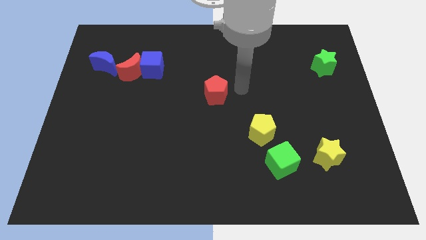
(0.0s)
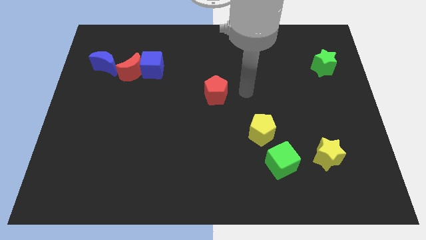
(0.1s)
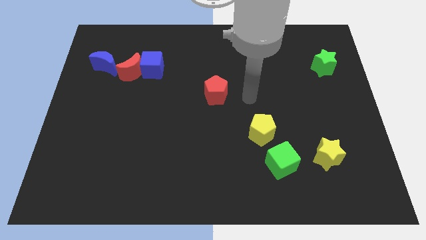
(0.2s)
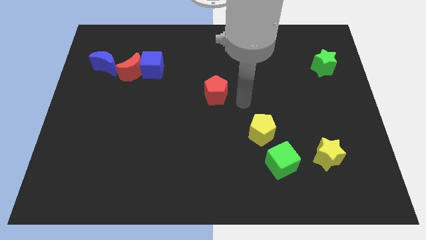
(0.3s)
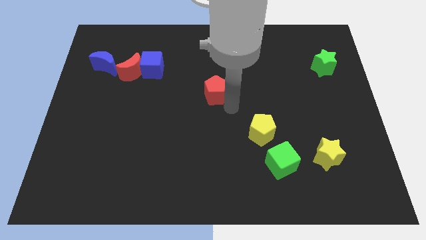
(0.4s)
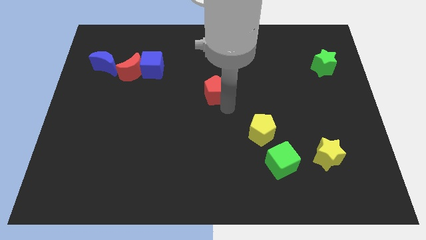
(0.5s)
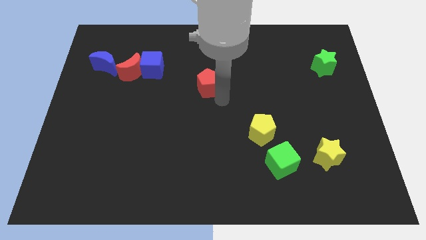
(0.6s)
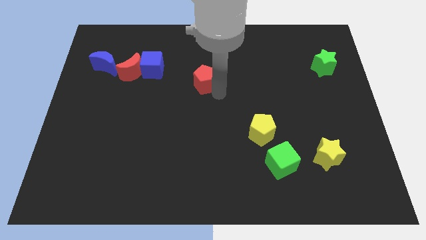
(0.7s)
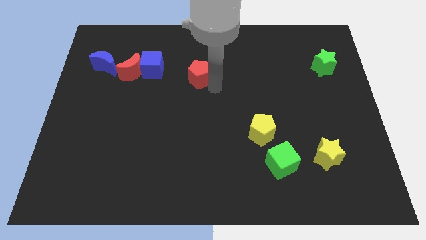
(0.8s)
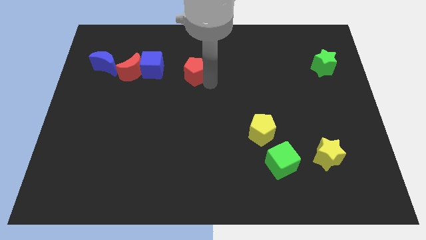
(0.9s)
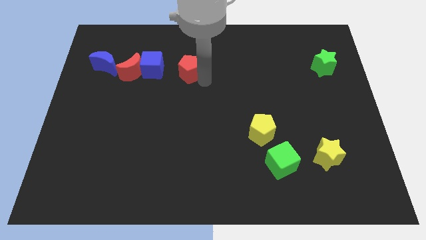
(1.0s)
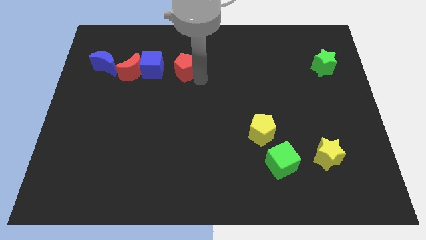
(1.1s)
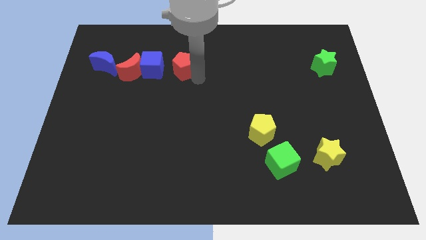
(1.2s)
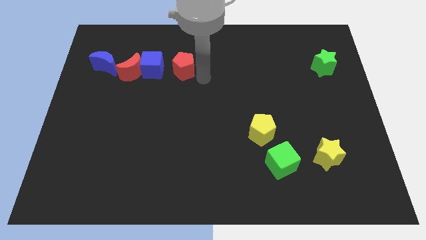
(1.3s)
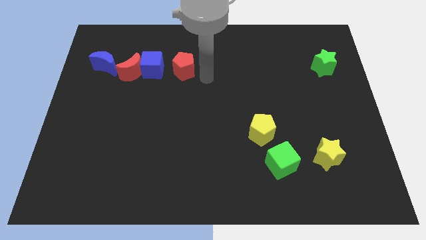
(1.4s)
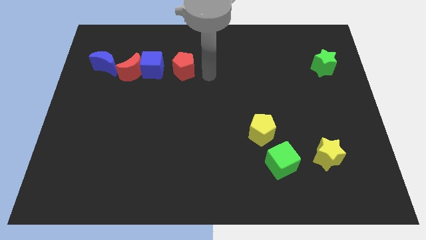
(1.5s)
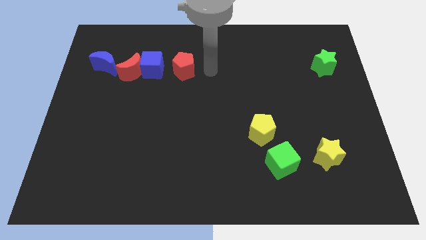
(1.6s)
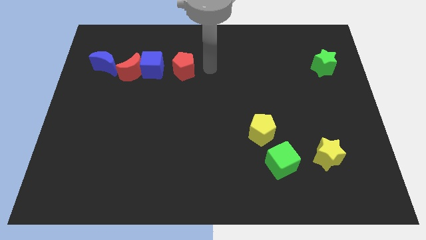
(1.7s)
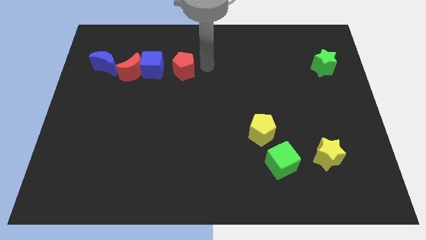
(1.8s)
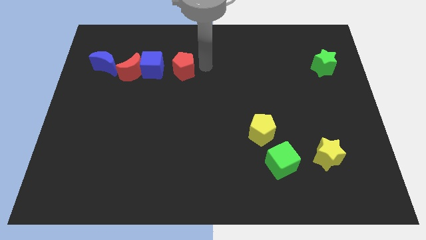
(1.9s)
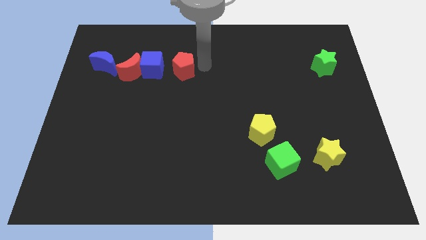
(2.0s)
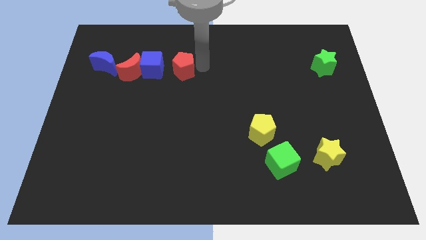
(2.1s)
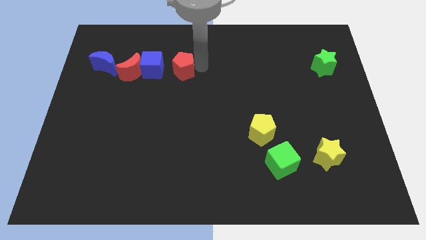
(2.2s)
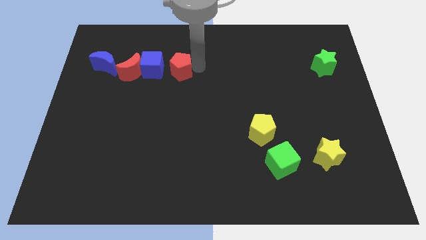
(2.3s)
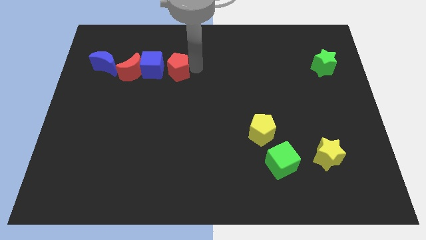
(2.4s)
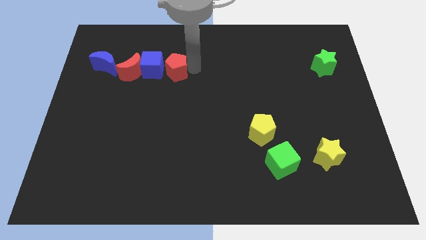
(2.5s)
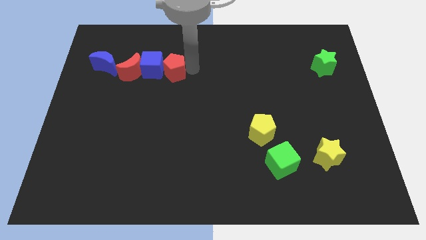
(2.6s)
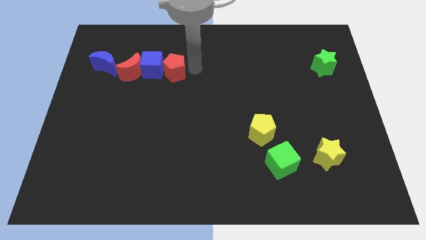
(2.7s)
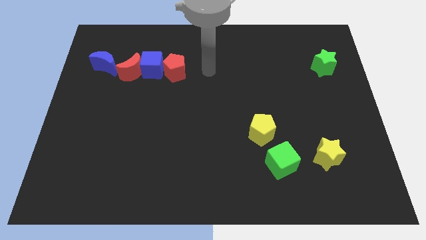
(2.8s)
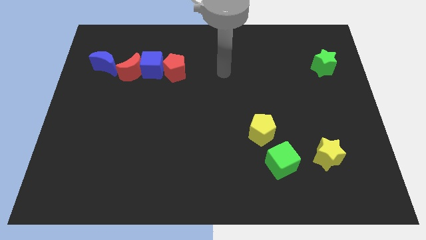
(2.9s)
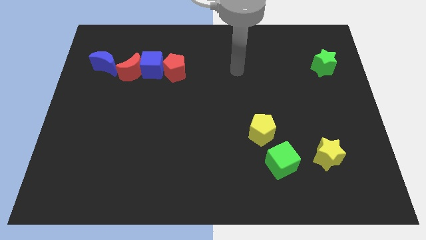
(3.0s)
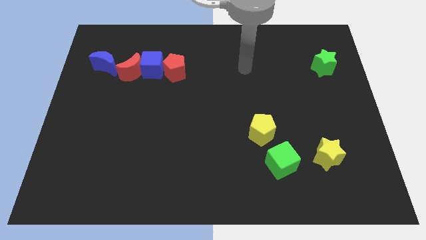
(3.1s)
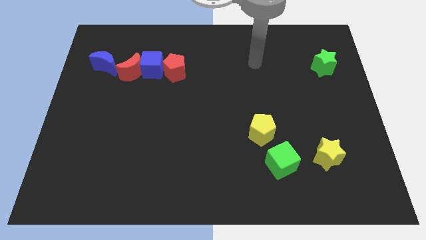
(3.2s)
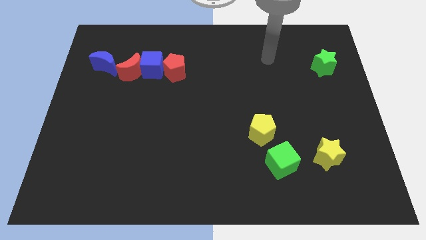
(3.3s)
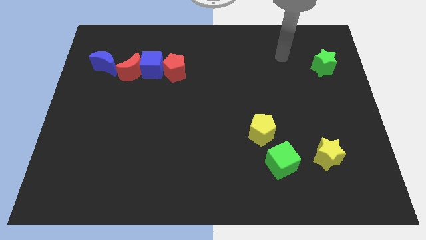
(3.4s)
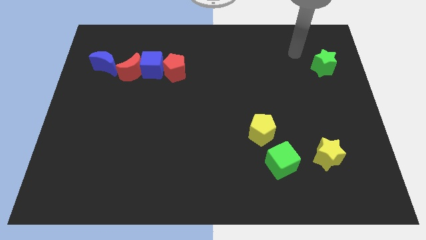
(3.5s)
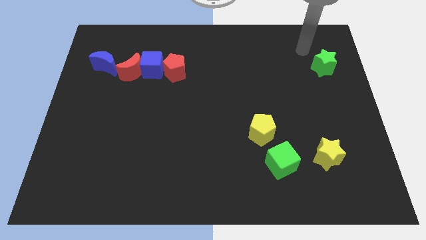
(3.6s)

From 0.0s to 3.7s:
place the red pentagon right to the blue cube

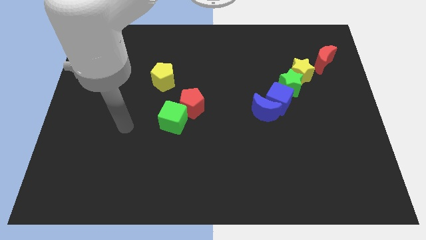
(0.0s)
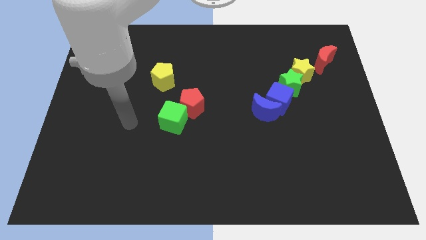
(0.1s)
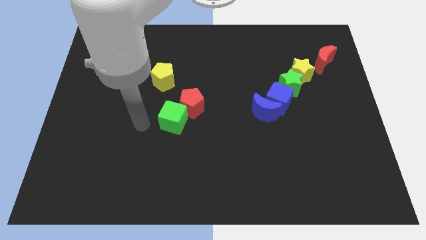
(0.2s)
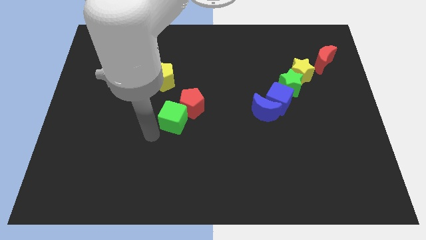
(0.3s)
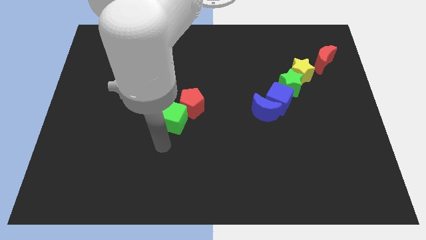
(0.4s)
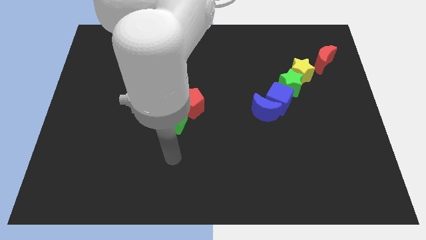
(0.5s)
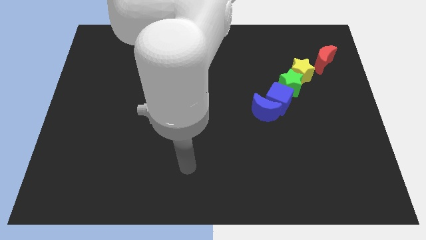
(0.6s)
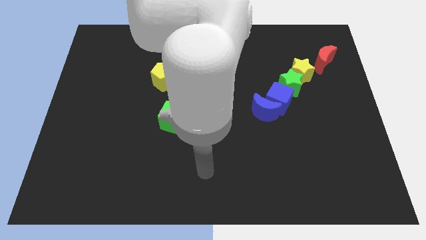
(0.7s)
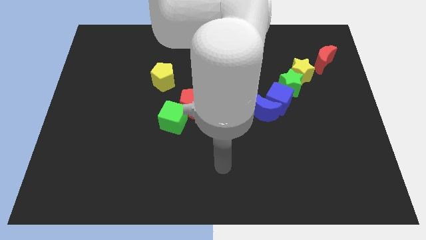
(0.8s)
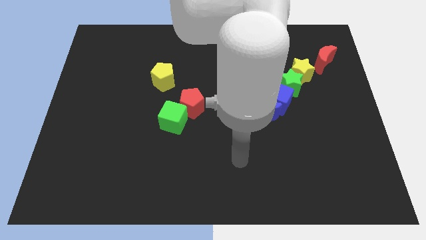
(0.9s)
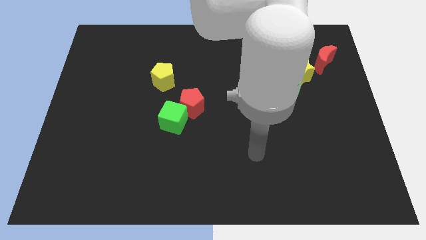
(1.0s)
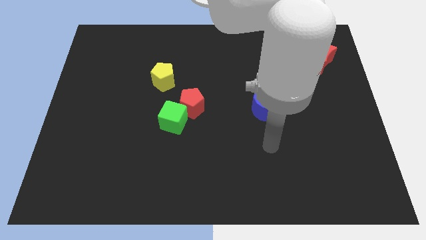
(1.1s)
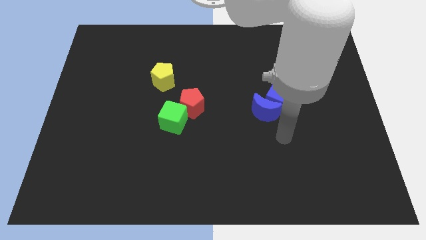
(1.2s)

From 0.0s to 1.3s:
place your arm below the blue moon

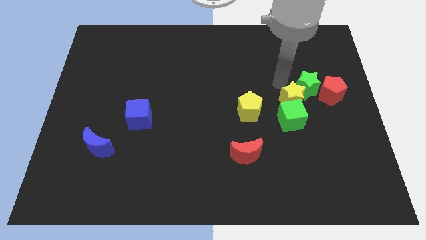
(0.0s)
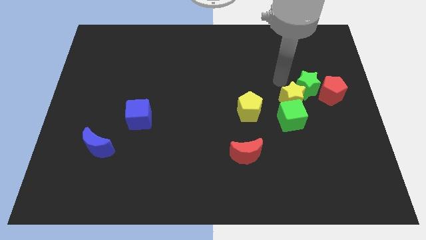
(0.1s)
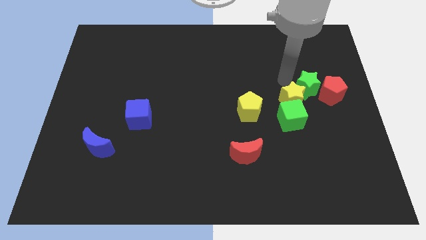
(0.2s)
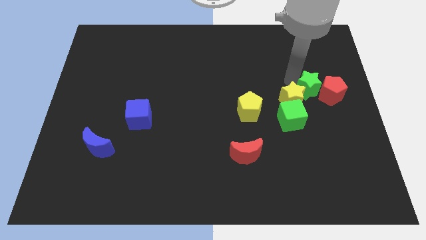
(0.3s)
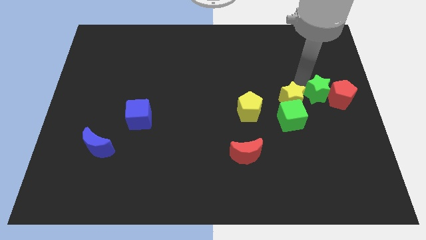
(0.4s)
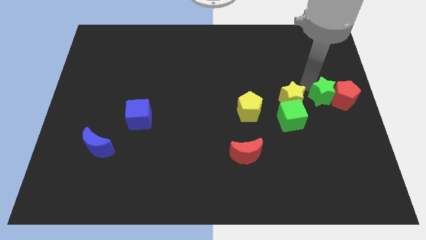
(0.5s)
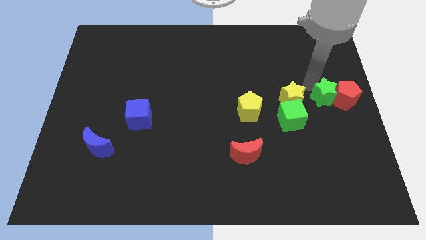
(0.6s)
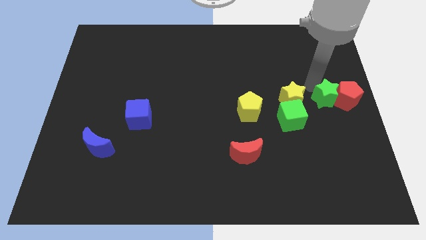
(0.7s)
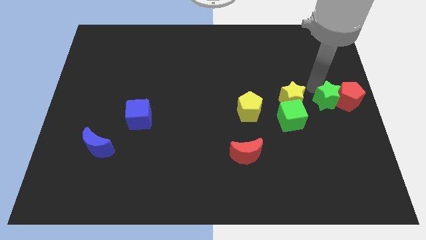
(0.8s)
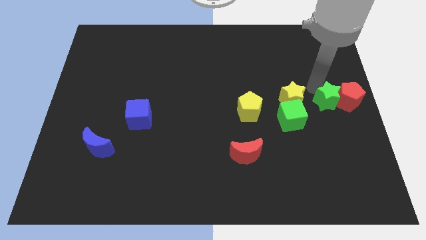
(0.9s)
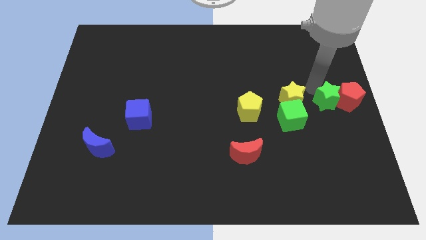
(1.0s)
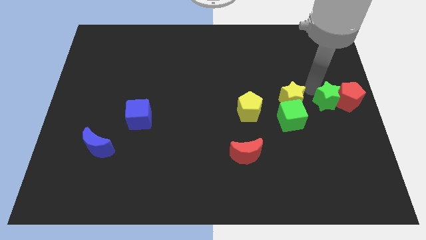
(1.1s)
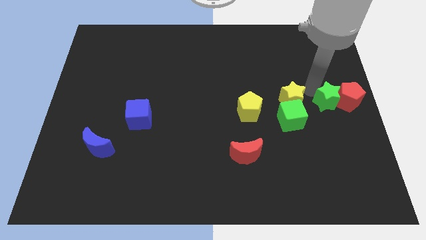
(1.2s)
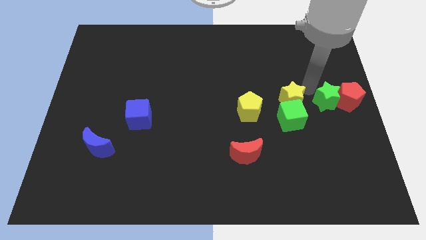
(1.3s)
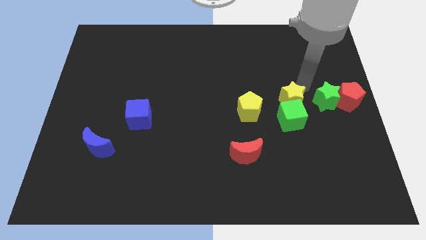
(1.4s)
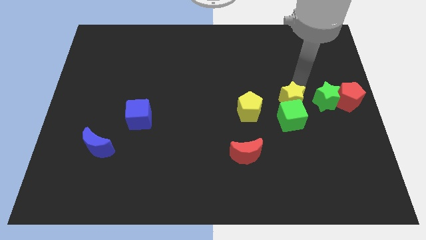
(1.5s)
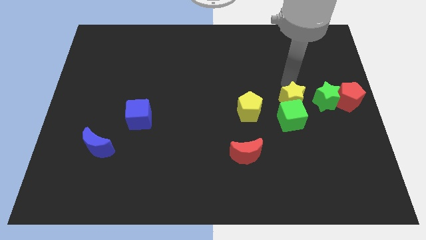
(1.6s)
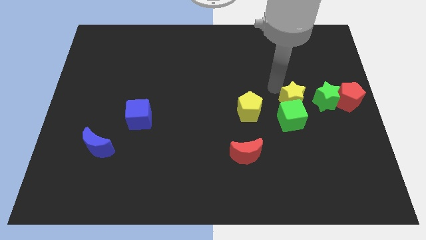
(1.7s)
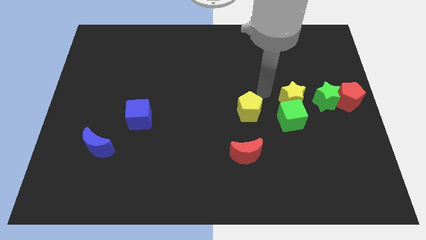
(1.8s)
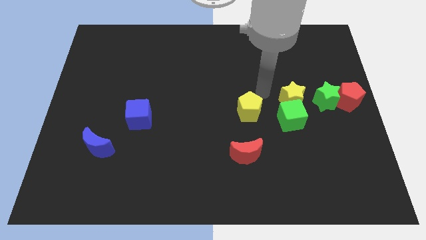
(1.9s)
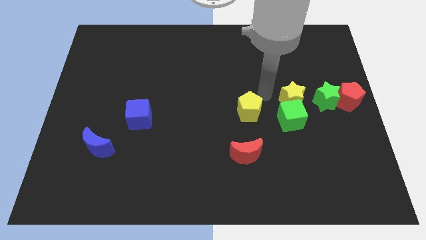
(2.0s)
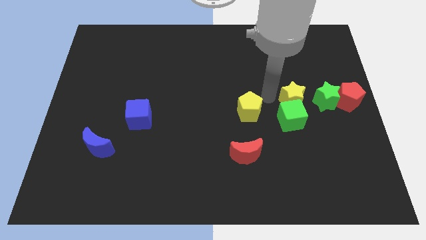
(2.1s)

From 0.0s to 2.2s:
place the green star and the red pentagon at the right center

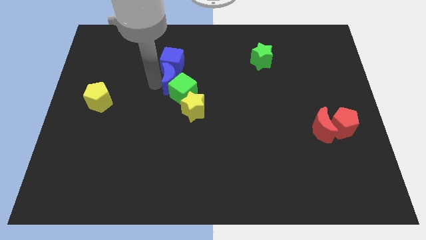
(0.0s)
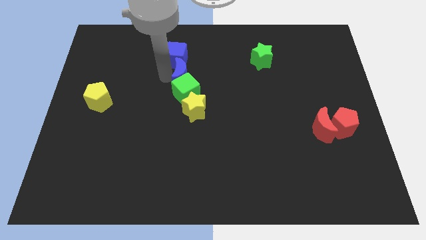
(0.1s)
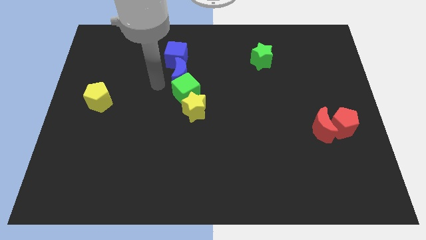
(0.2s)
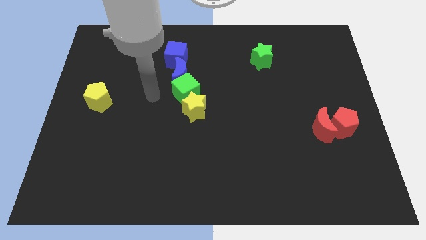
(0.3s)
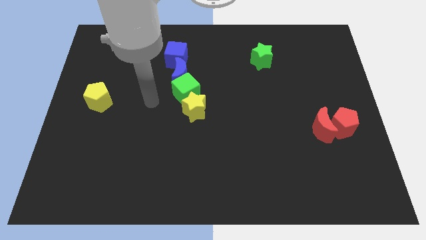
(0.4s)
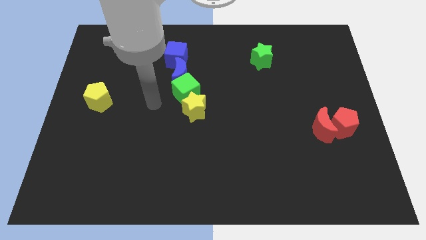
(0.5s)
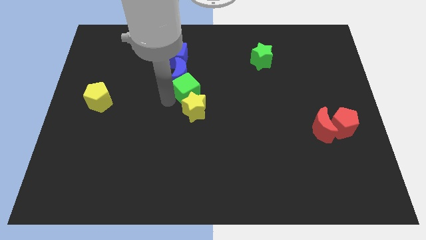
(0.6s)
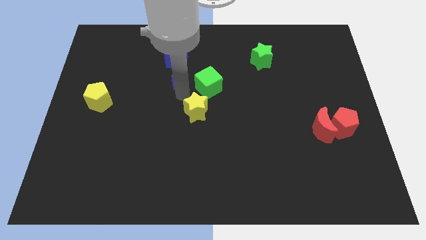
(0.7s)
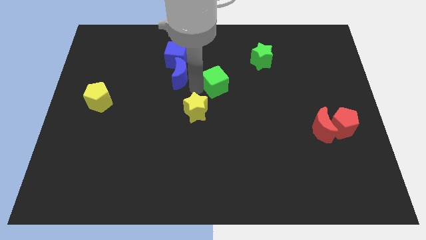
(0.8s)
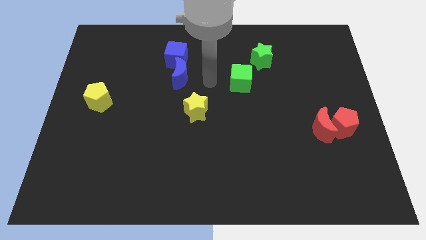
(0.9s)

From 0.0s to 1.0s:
push green cube slightly towards right

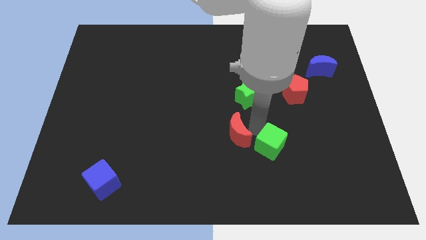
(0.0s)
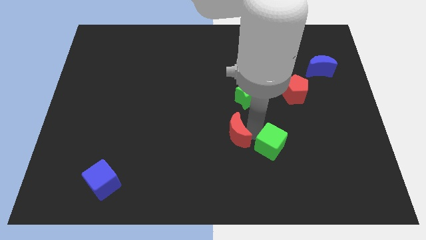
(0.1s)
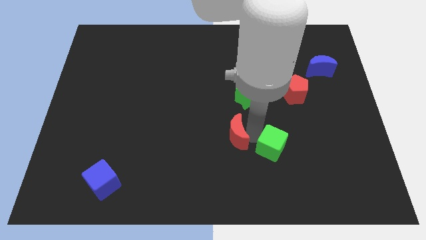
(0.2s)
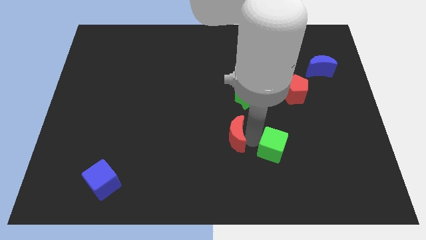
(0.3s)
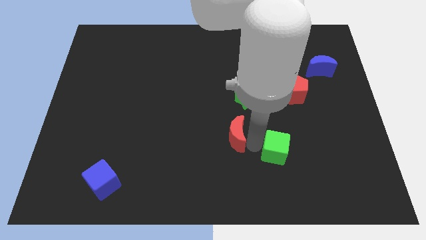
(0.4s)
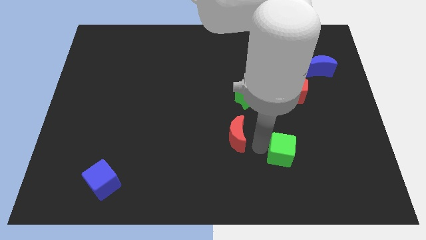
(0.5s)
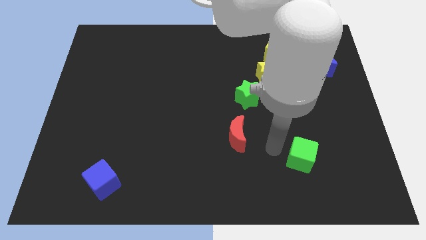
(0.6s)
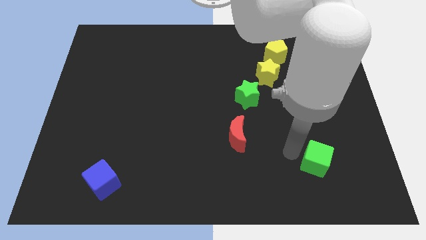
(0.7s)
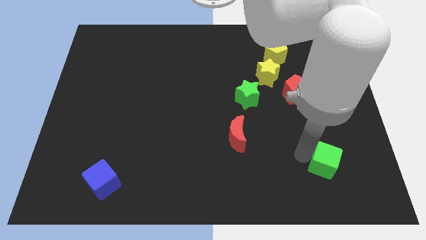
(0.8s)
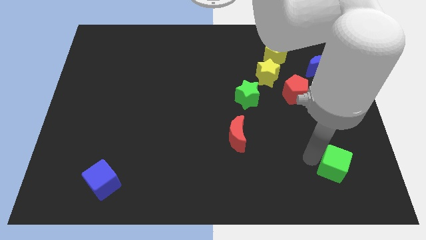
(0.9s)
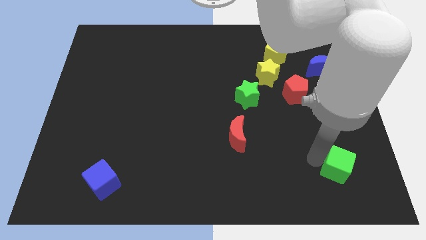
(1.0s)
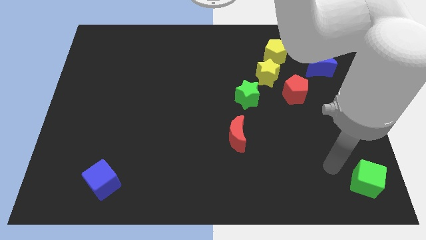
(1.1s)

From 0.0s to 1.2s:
separate the green cube from the red crescent
